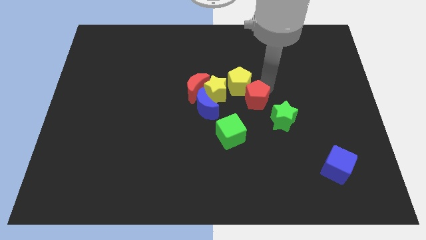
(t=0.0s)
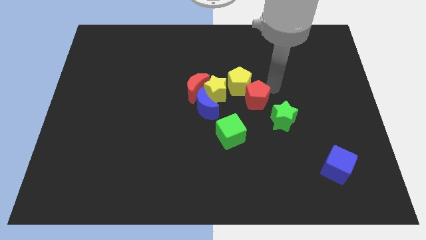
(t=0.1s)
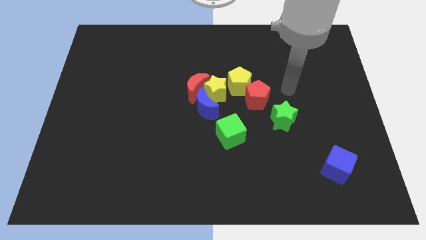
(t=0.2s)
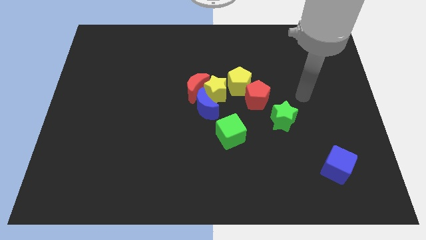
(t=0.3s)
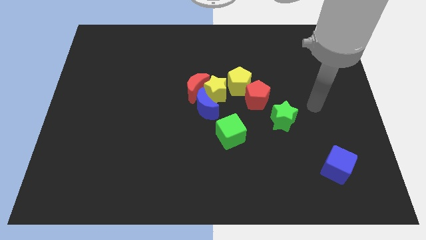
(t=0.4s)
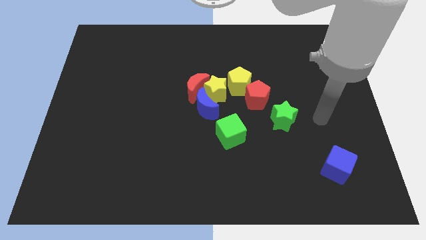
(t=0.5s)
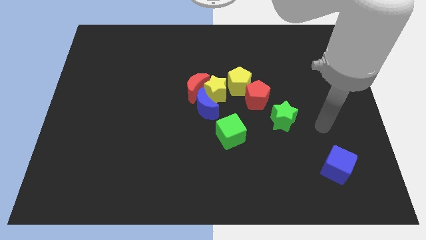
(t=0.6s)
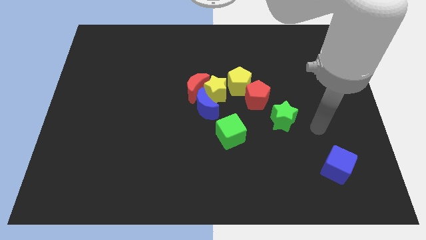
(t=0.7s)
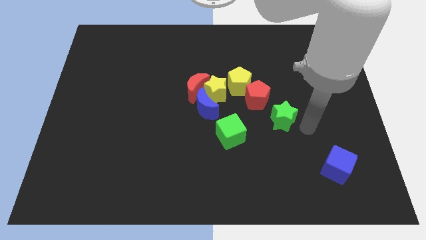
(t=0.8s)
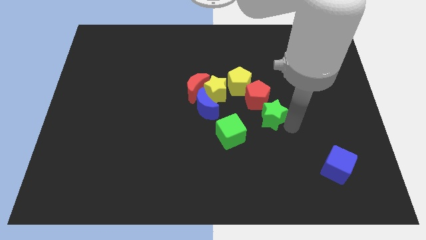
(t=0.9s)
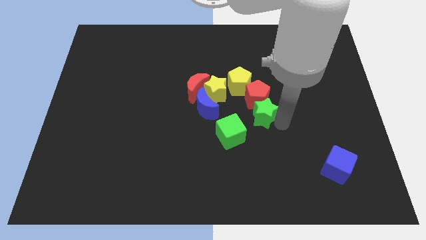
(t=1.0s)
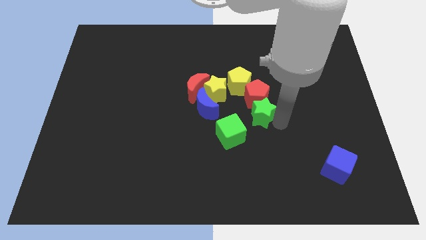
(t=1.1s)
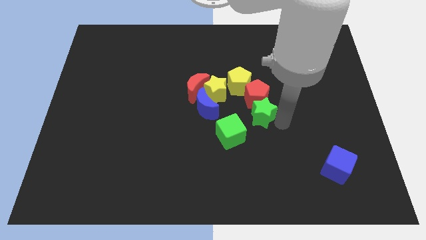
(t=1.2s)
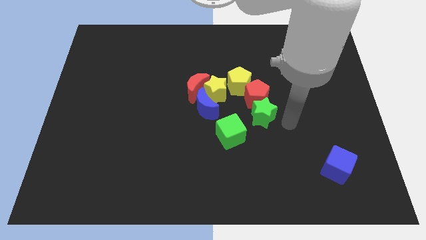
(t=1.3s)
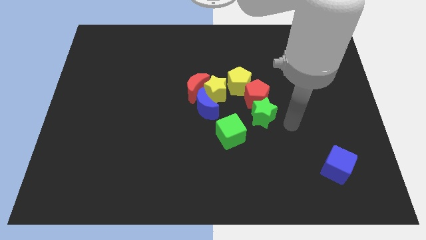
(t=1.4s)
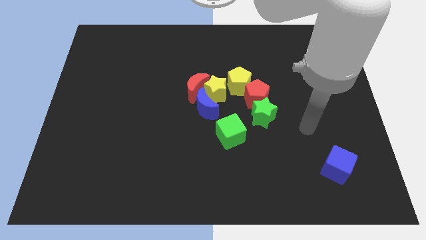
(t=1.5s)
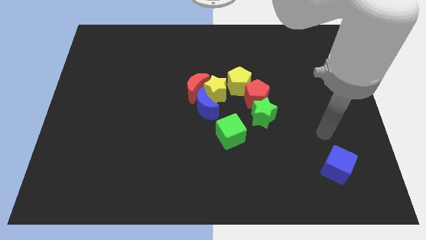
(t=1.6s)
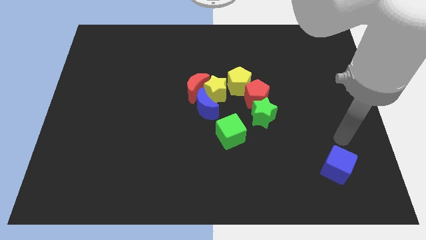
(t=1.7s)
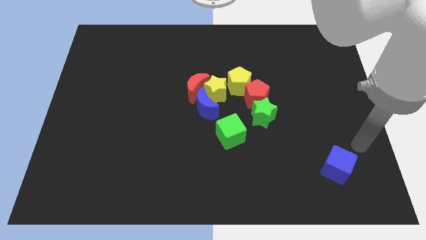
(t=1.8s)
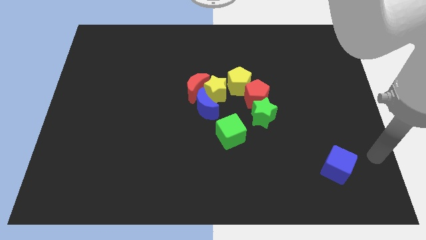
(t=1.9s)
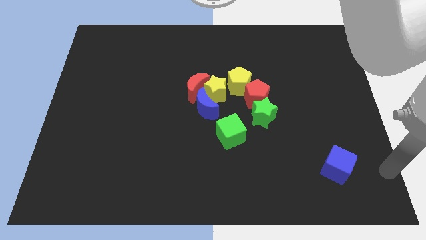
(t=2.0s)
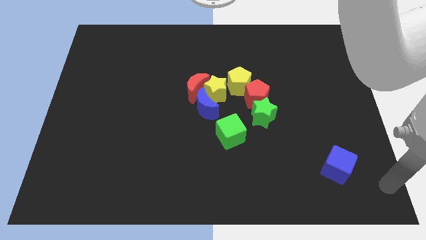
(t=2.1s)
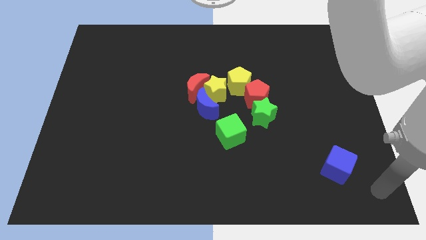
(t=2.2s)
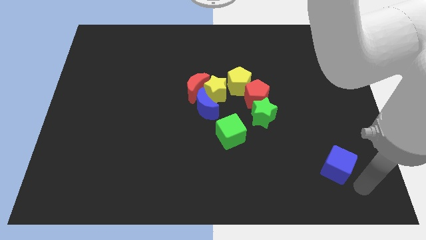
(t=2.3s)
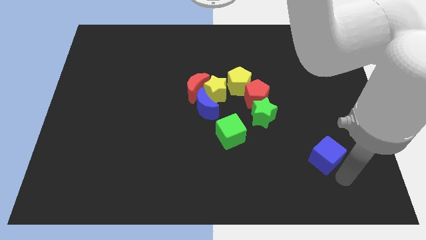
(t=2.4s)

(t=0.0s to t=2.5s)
push the green star into the bottom side of the red pentagon

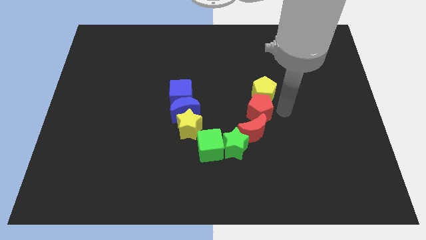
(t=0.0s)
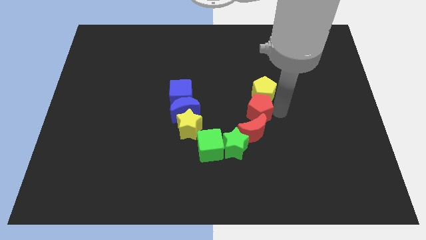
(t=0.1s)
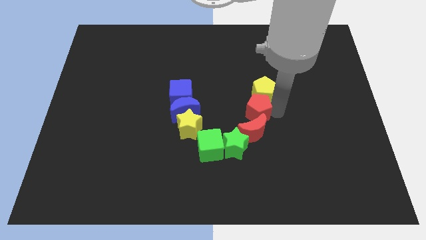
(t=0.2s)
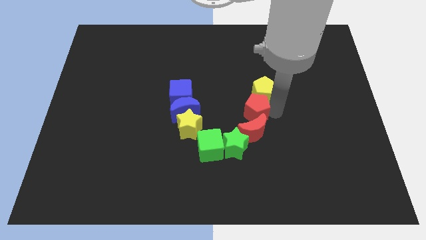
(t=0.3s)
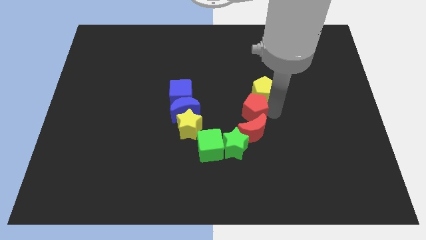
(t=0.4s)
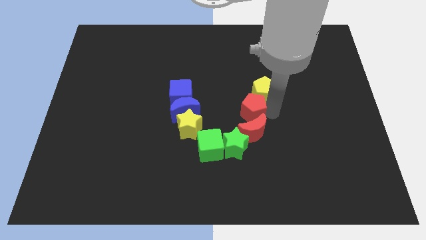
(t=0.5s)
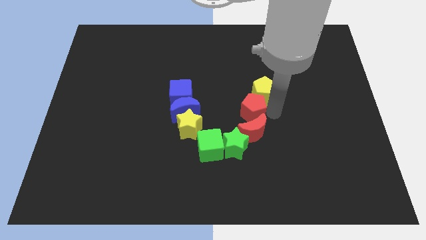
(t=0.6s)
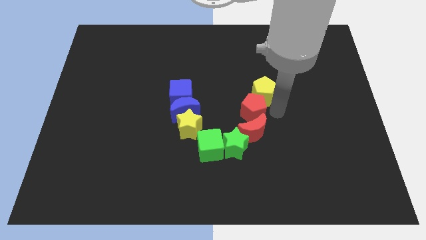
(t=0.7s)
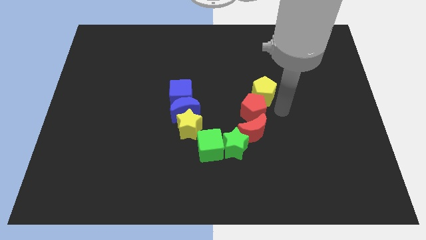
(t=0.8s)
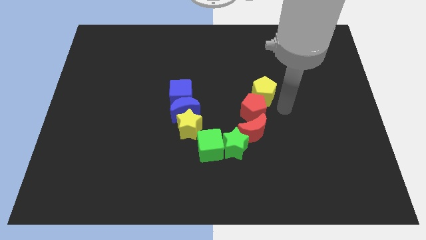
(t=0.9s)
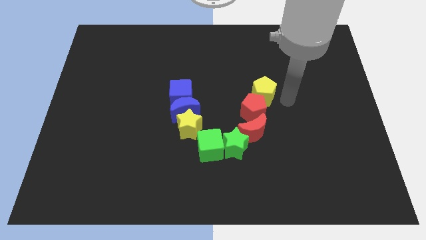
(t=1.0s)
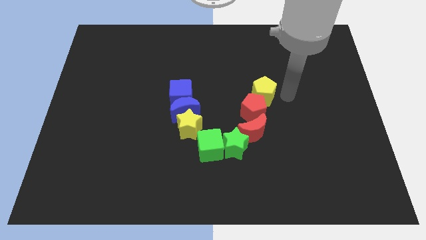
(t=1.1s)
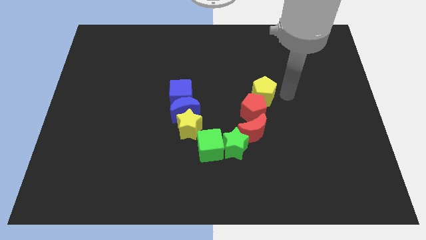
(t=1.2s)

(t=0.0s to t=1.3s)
move red pentagon slightly to the left

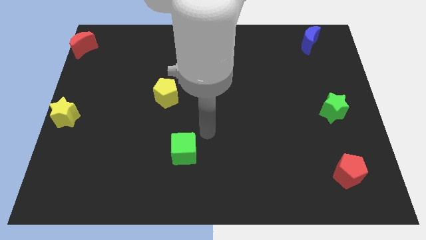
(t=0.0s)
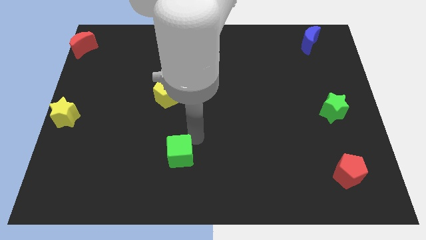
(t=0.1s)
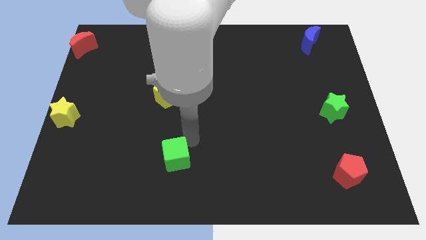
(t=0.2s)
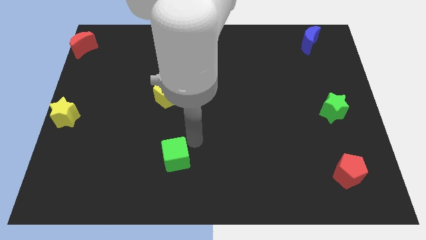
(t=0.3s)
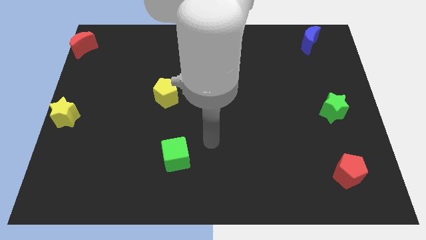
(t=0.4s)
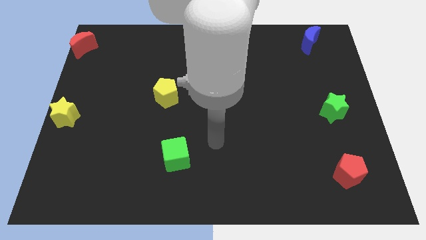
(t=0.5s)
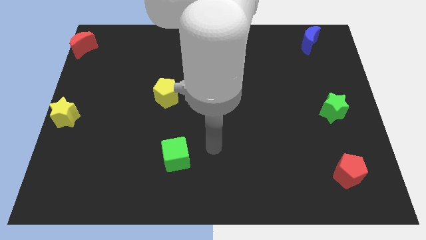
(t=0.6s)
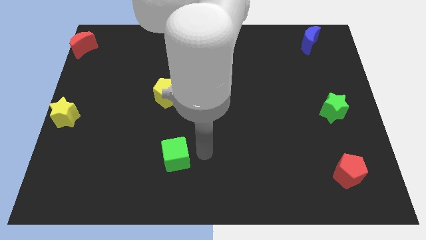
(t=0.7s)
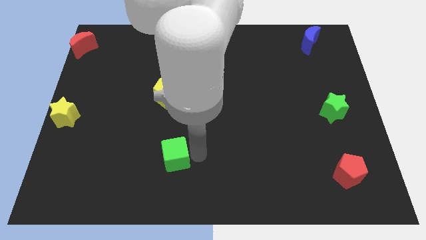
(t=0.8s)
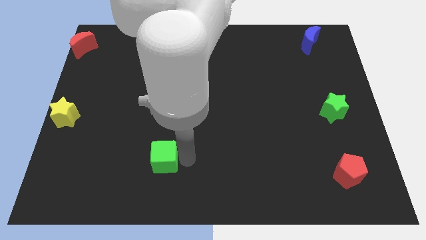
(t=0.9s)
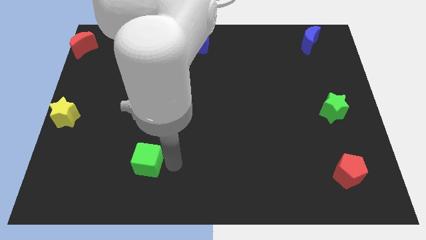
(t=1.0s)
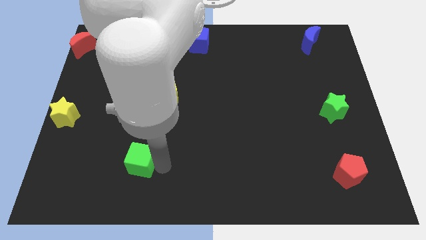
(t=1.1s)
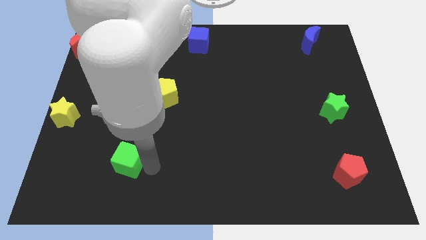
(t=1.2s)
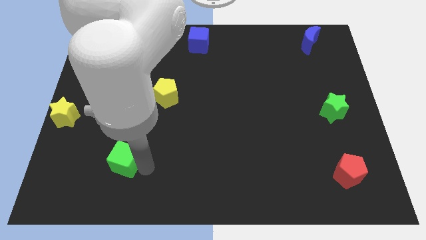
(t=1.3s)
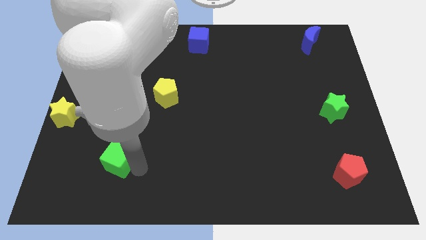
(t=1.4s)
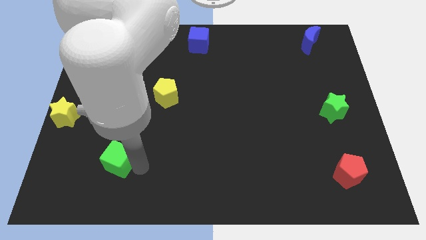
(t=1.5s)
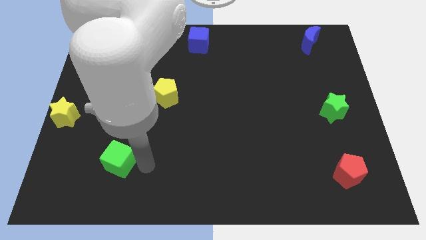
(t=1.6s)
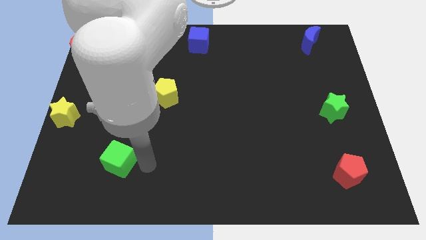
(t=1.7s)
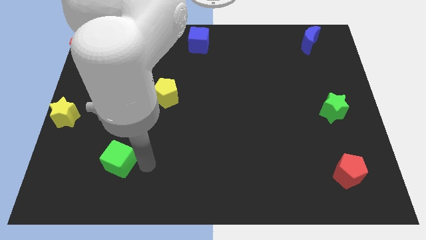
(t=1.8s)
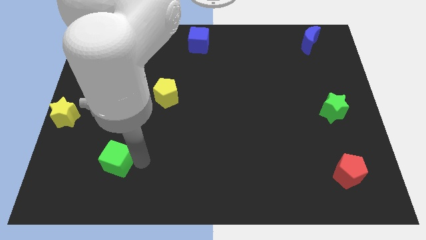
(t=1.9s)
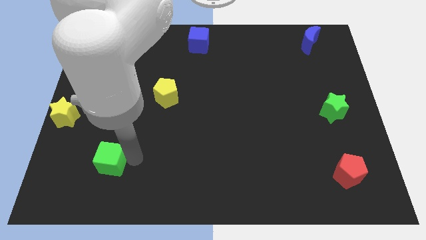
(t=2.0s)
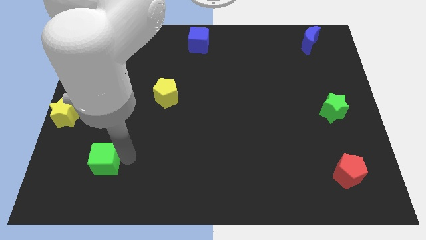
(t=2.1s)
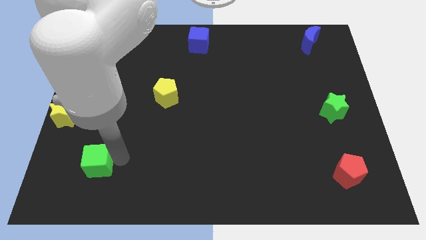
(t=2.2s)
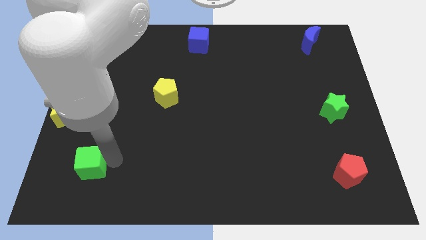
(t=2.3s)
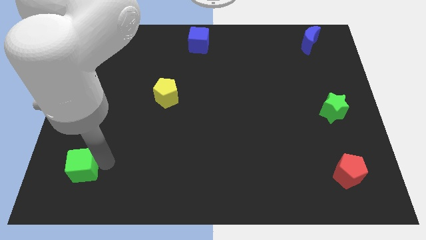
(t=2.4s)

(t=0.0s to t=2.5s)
move the green cube towards the bottom left

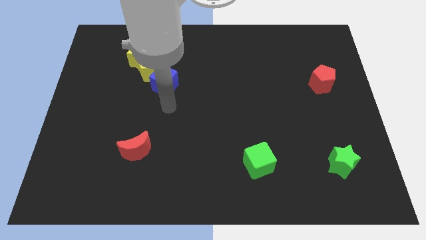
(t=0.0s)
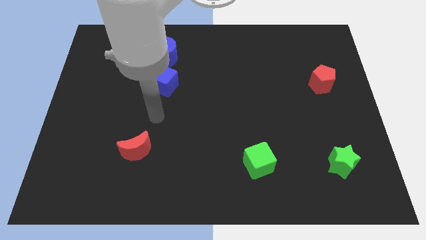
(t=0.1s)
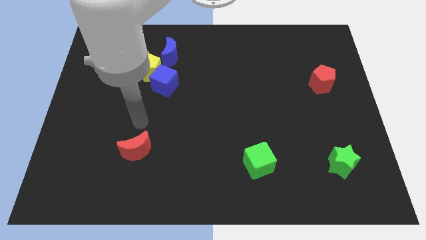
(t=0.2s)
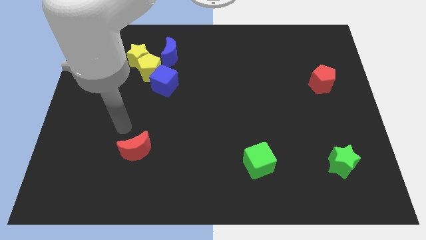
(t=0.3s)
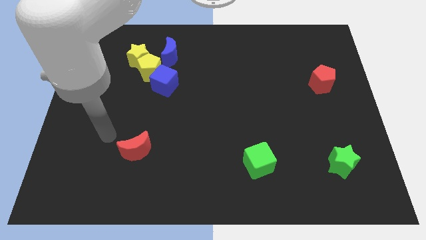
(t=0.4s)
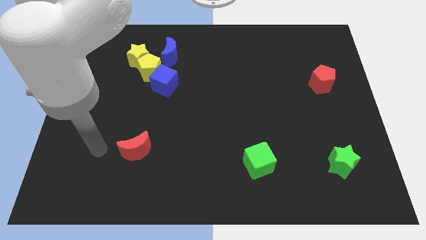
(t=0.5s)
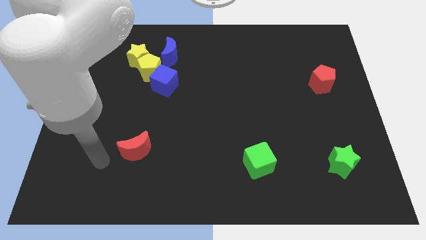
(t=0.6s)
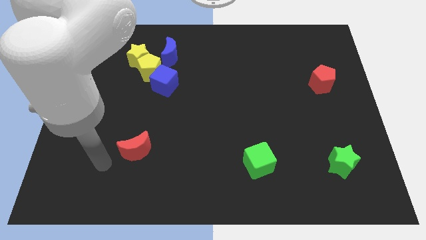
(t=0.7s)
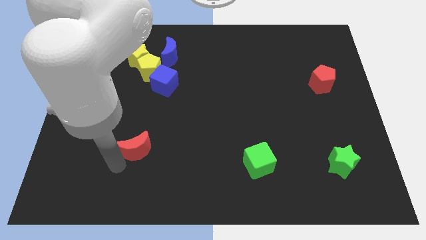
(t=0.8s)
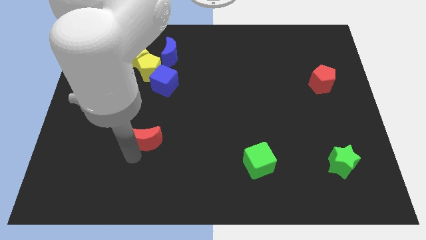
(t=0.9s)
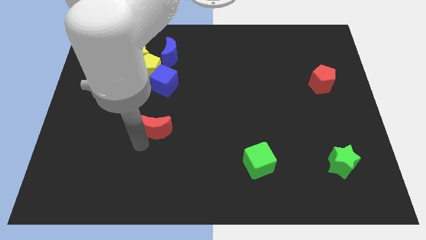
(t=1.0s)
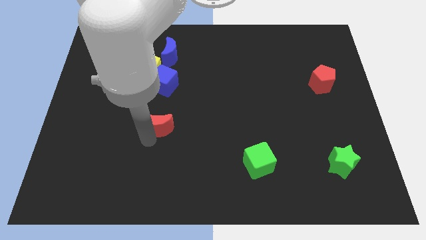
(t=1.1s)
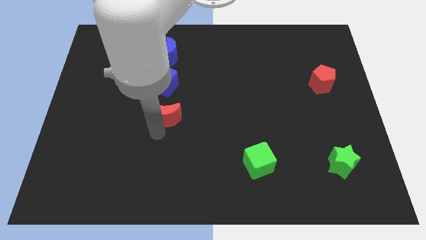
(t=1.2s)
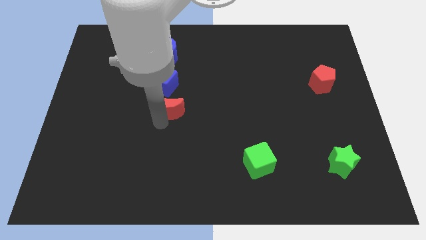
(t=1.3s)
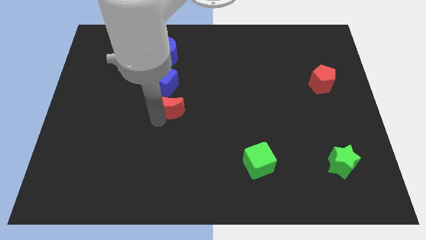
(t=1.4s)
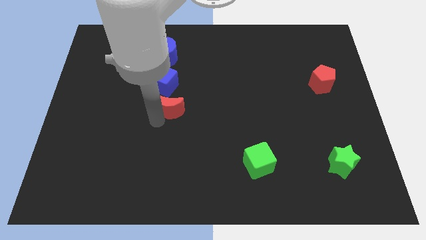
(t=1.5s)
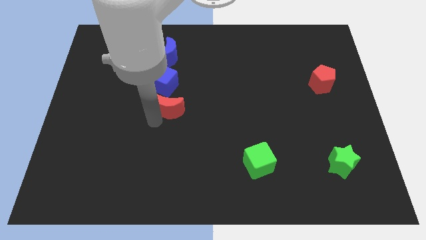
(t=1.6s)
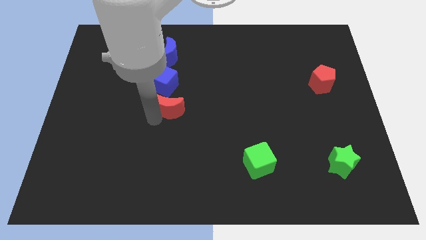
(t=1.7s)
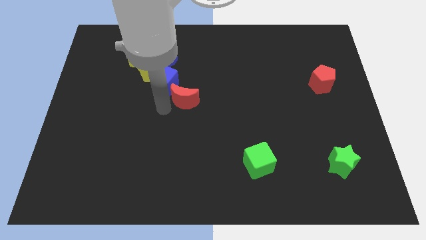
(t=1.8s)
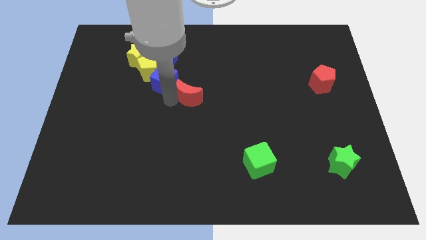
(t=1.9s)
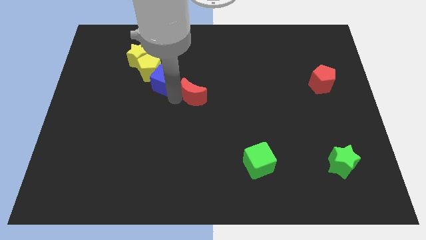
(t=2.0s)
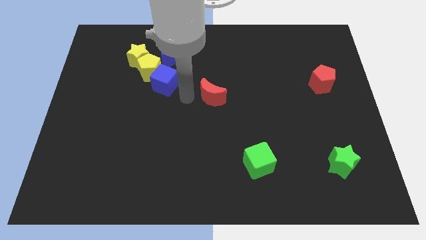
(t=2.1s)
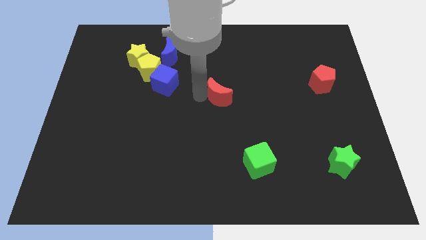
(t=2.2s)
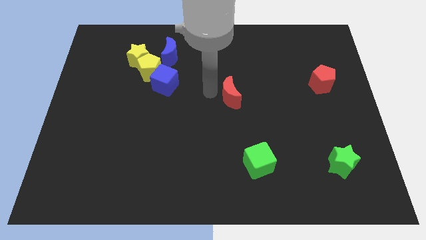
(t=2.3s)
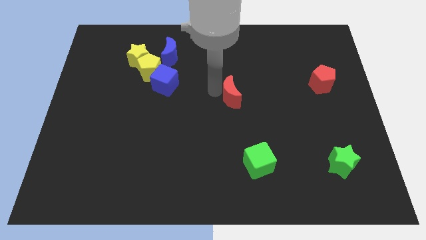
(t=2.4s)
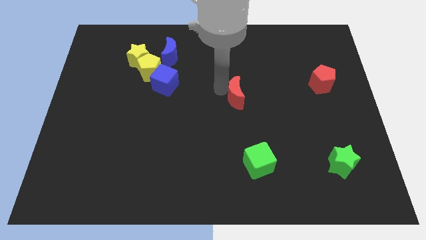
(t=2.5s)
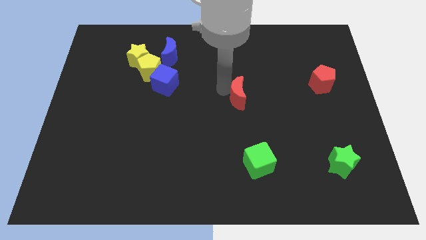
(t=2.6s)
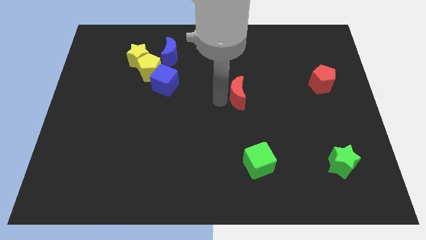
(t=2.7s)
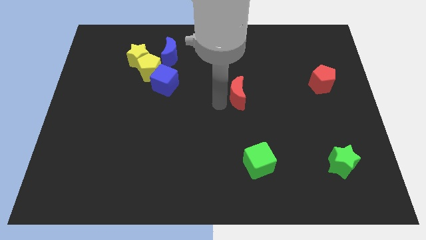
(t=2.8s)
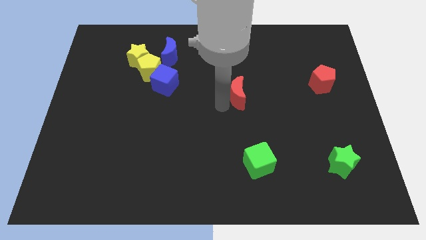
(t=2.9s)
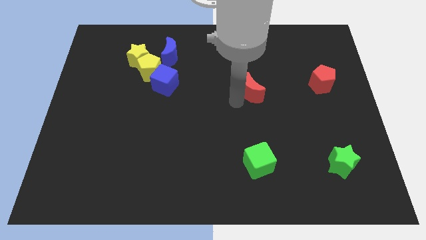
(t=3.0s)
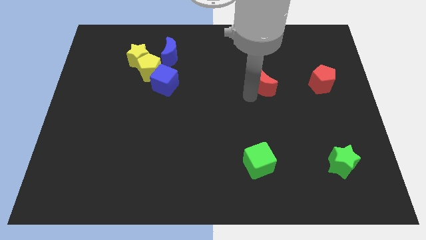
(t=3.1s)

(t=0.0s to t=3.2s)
move the red crescent vertically to the top side of the green cube
